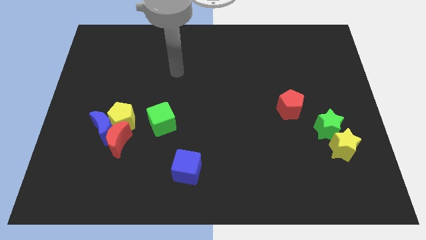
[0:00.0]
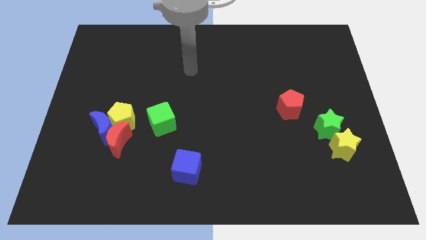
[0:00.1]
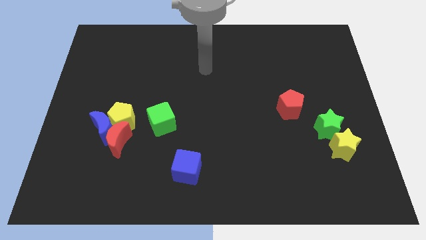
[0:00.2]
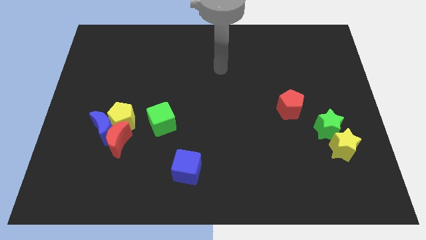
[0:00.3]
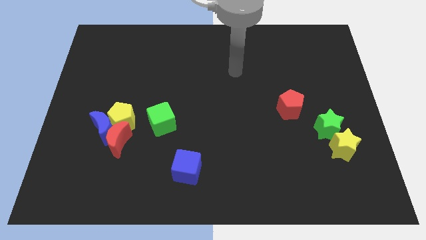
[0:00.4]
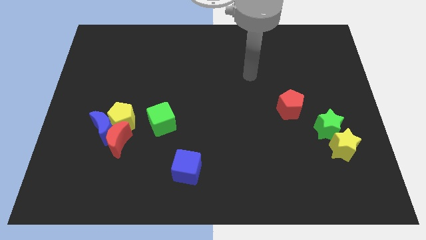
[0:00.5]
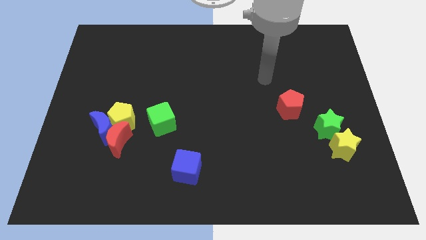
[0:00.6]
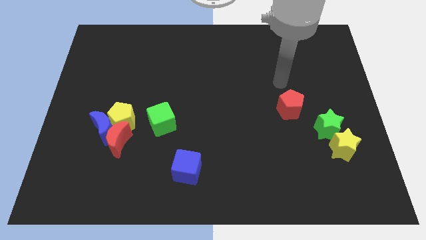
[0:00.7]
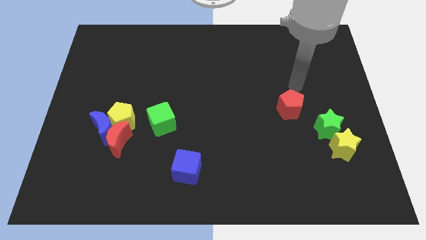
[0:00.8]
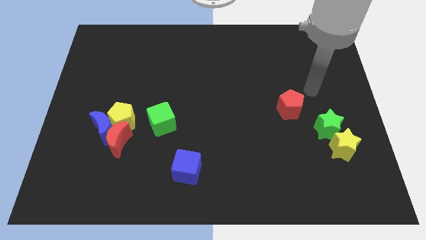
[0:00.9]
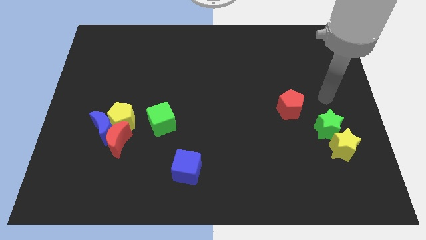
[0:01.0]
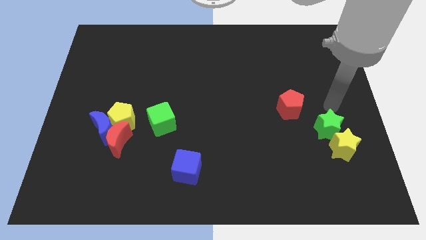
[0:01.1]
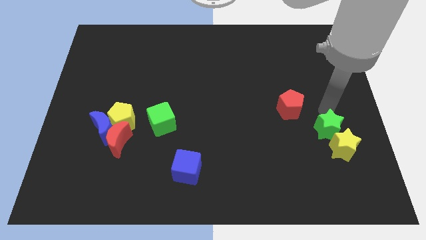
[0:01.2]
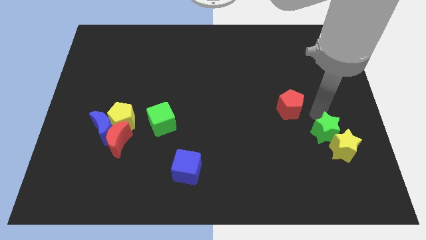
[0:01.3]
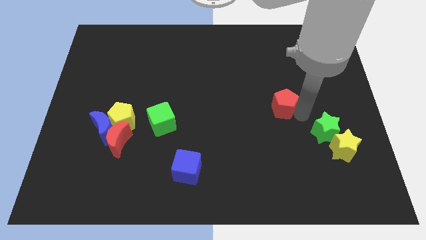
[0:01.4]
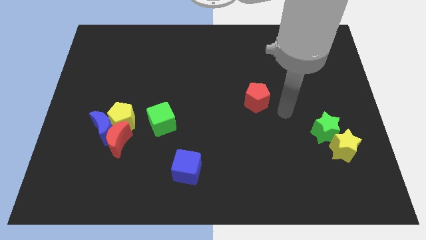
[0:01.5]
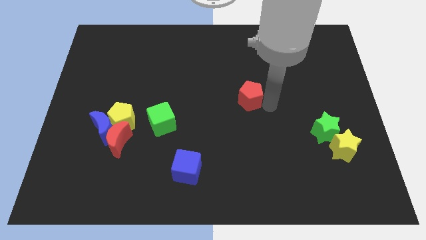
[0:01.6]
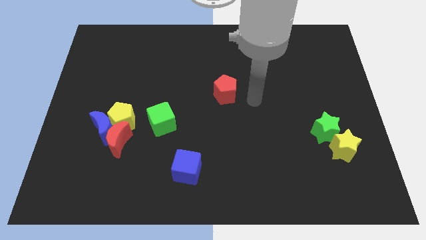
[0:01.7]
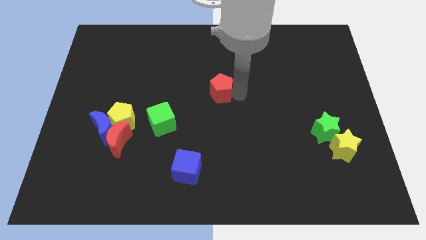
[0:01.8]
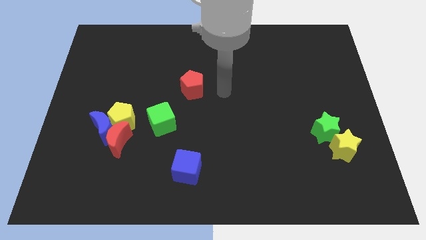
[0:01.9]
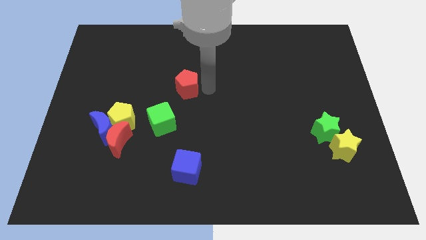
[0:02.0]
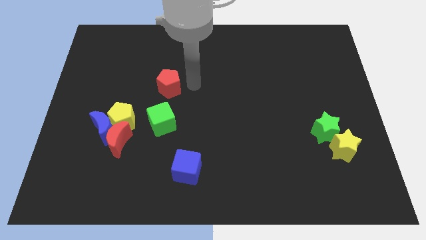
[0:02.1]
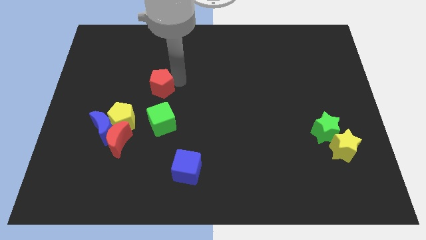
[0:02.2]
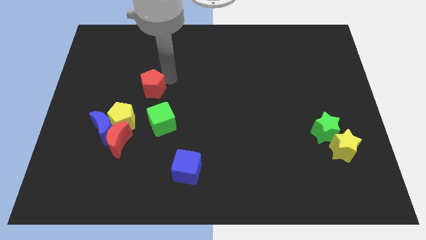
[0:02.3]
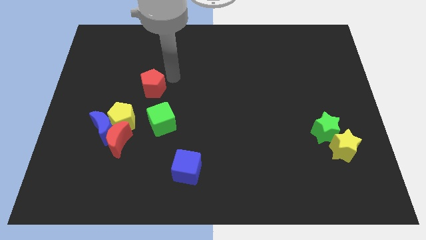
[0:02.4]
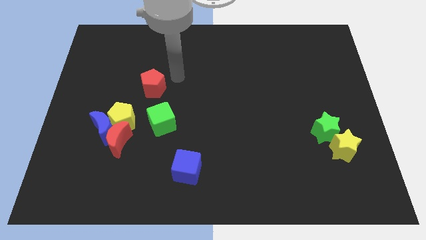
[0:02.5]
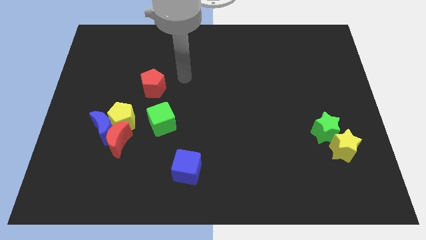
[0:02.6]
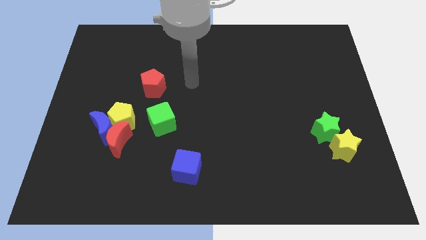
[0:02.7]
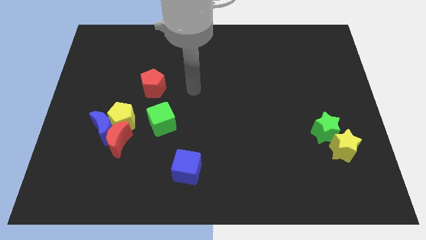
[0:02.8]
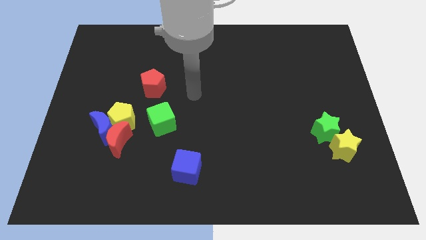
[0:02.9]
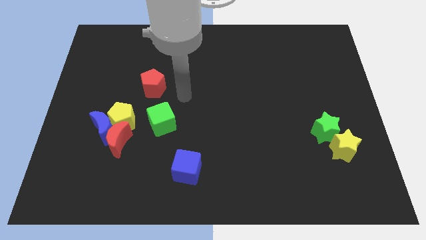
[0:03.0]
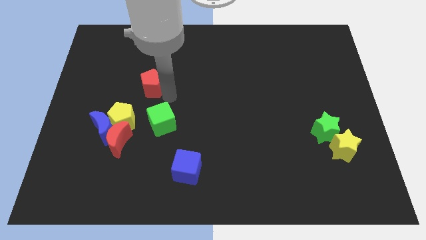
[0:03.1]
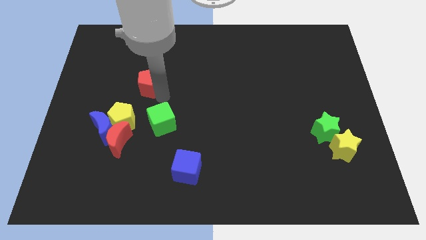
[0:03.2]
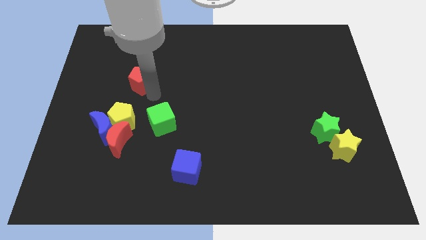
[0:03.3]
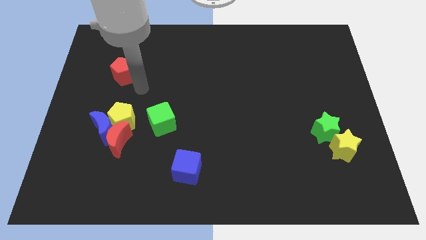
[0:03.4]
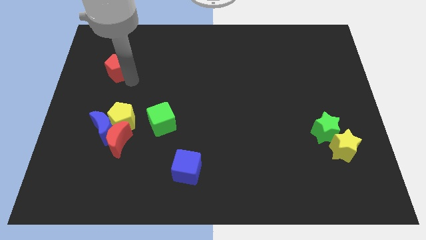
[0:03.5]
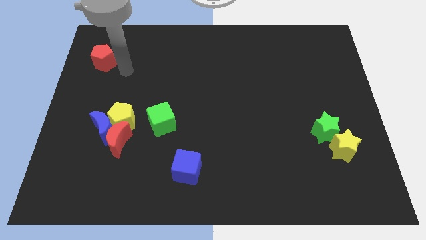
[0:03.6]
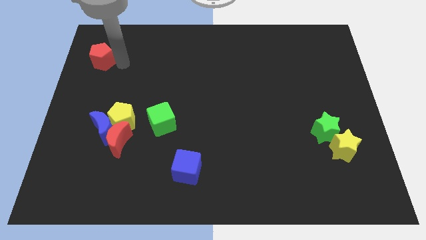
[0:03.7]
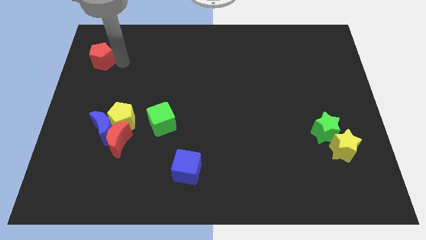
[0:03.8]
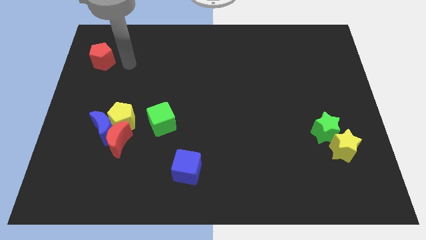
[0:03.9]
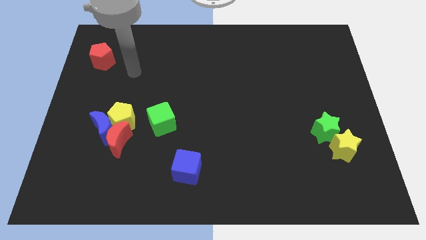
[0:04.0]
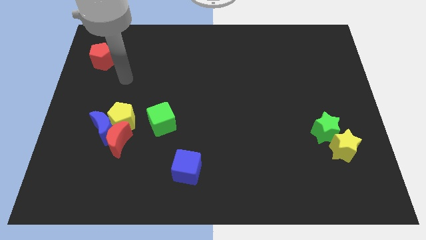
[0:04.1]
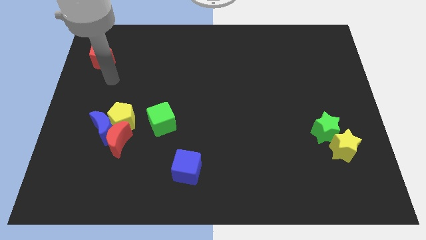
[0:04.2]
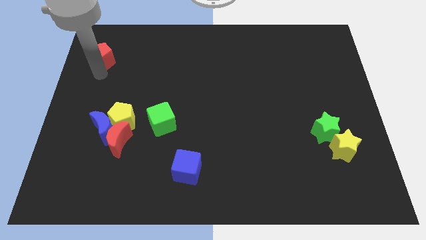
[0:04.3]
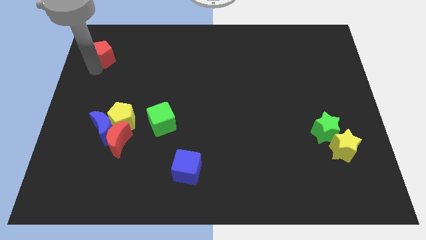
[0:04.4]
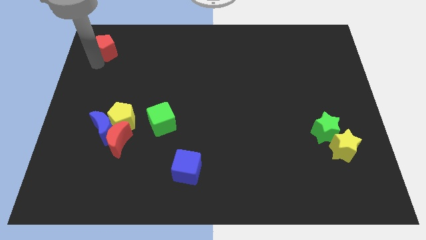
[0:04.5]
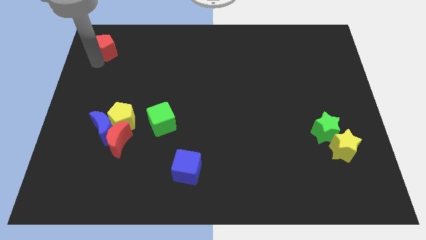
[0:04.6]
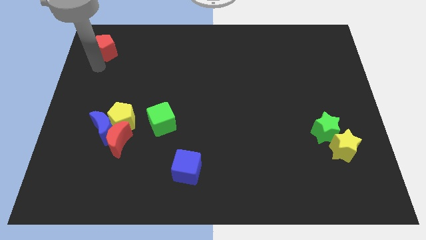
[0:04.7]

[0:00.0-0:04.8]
drag the red pentagon to the left

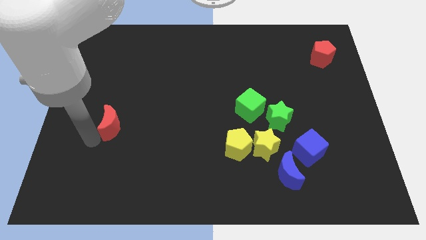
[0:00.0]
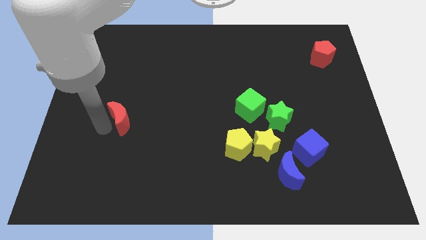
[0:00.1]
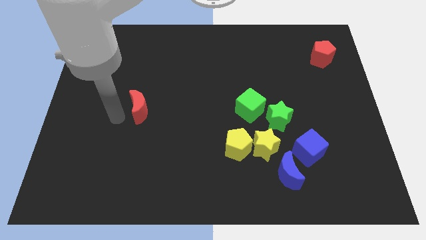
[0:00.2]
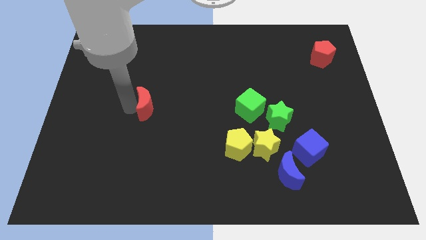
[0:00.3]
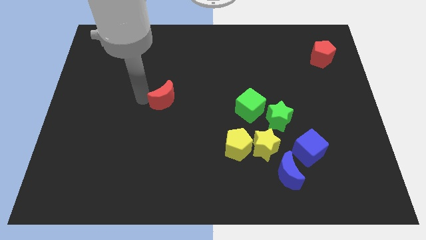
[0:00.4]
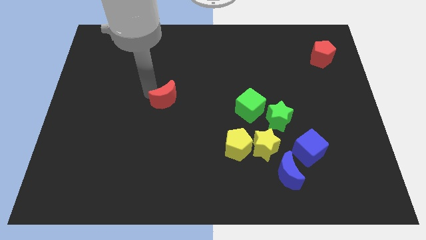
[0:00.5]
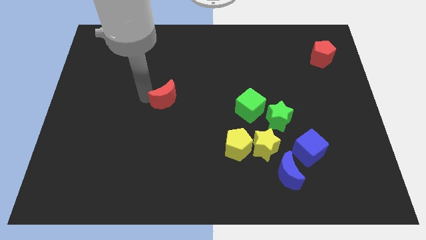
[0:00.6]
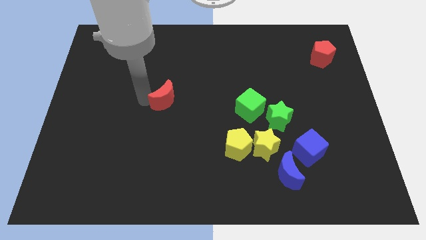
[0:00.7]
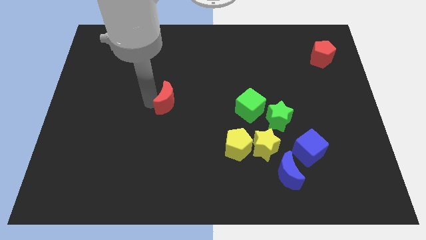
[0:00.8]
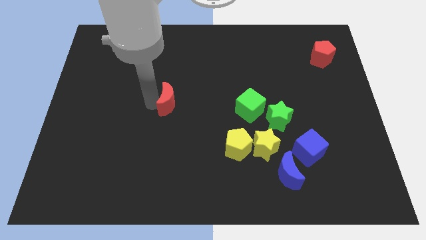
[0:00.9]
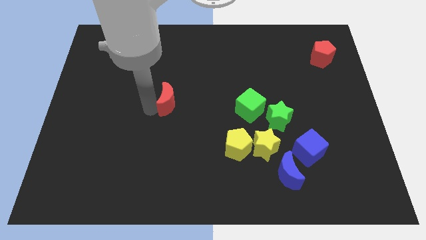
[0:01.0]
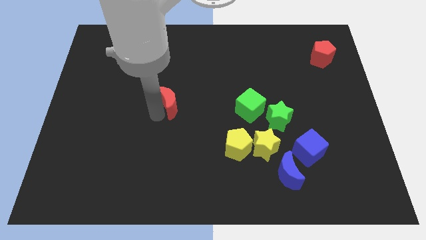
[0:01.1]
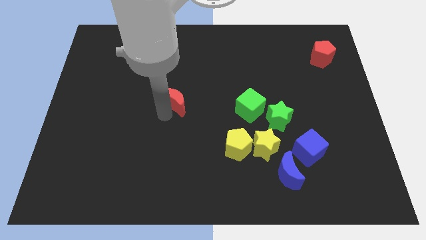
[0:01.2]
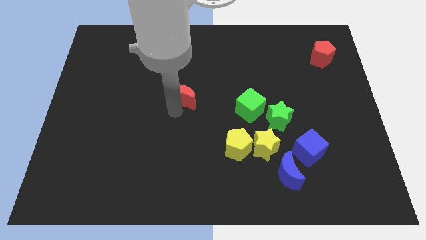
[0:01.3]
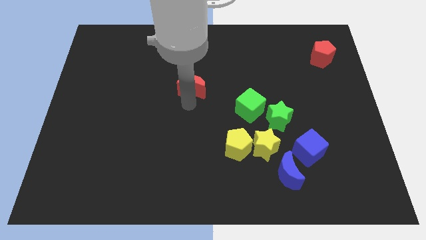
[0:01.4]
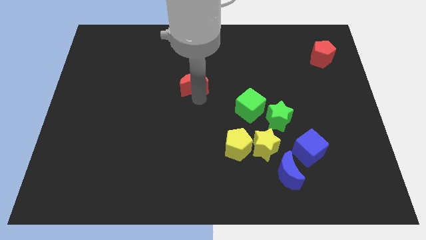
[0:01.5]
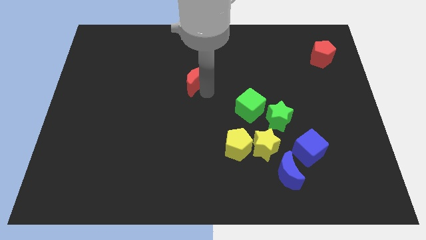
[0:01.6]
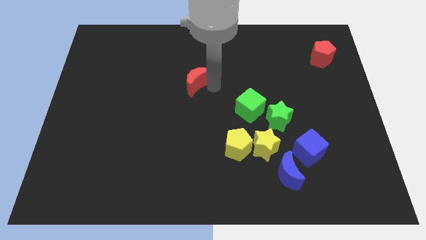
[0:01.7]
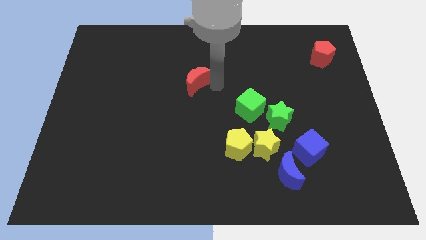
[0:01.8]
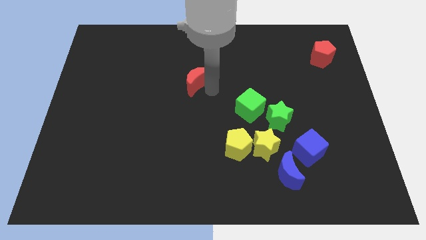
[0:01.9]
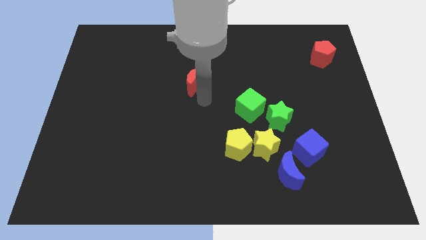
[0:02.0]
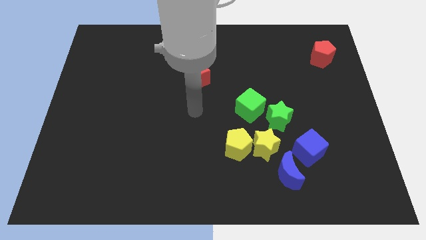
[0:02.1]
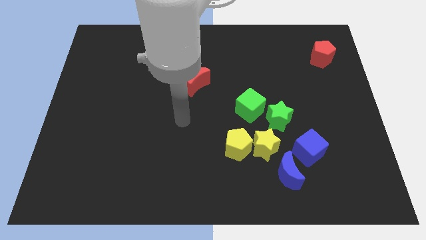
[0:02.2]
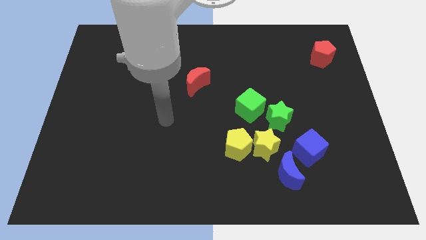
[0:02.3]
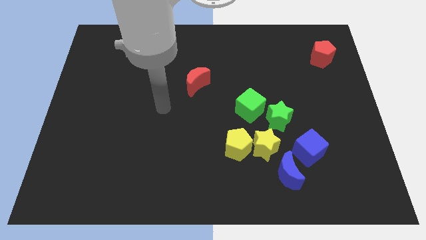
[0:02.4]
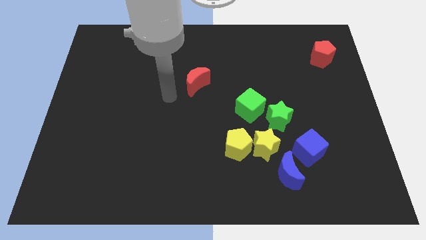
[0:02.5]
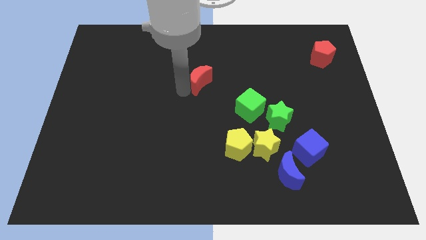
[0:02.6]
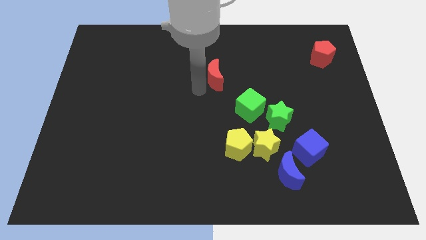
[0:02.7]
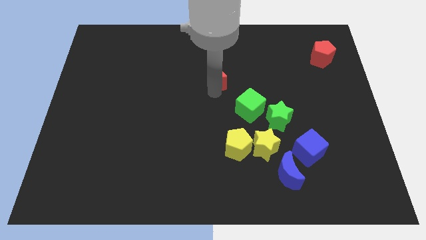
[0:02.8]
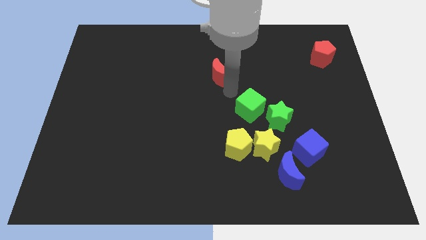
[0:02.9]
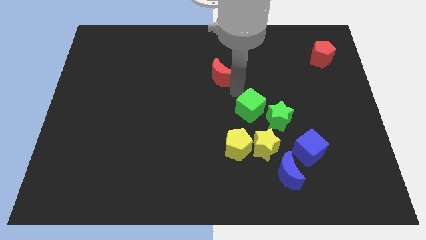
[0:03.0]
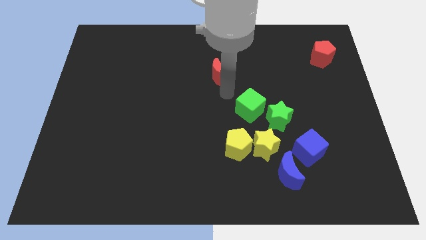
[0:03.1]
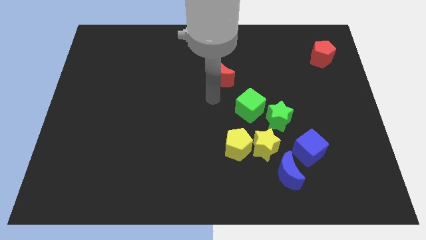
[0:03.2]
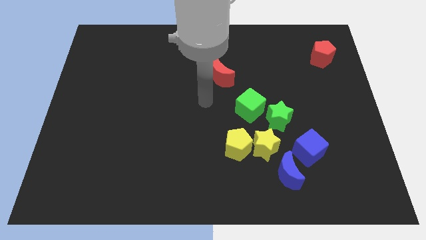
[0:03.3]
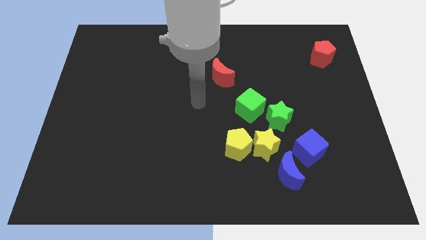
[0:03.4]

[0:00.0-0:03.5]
place the red moon diagonally to the top left side of the green cube

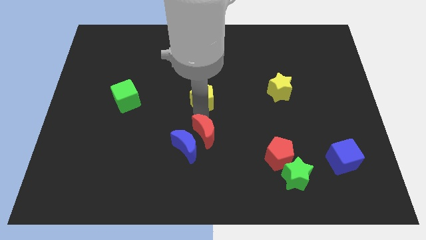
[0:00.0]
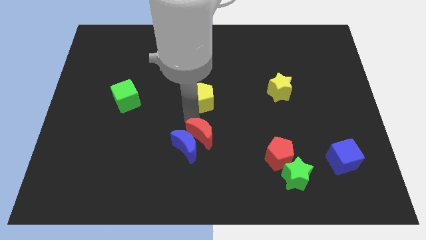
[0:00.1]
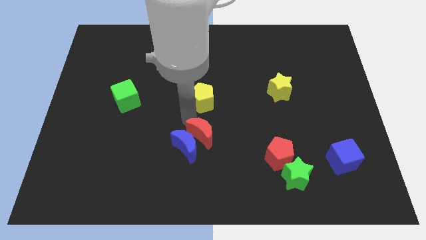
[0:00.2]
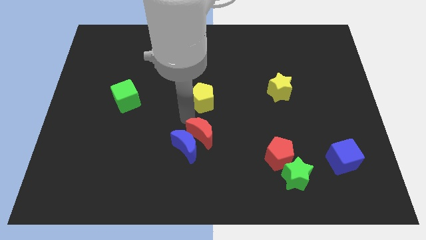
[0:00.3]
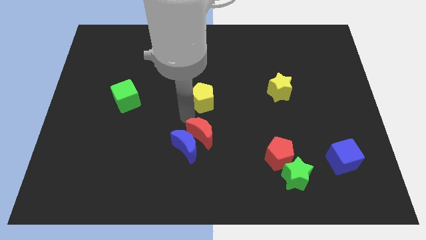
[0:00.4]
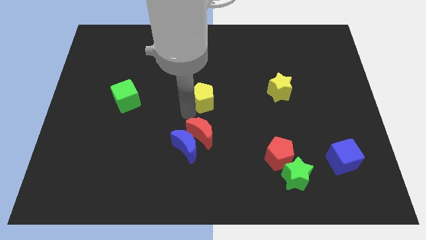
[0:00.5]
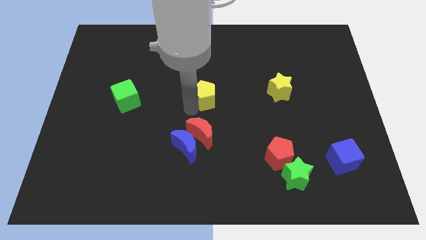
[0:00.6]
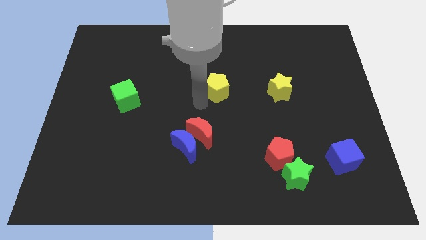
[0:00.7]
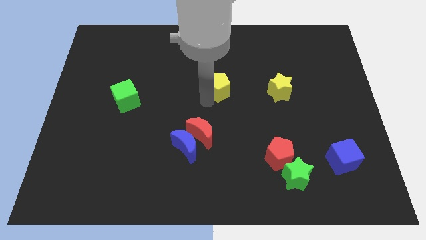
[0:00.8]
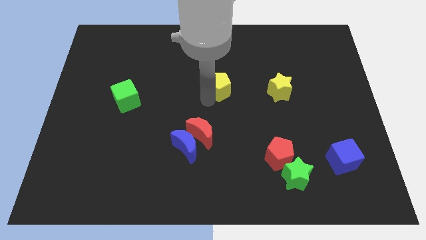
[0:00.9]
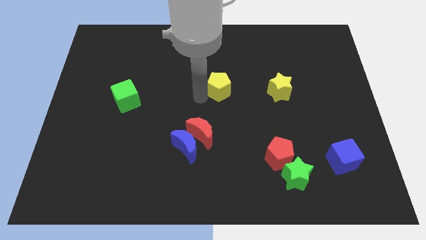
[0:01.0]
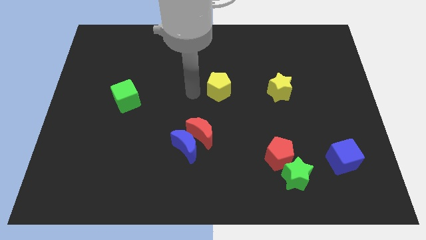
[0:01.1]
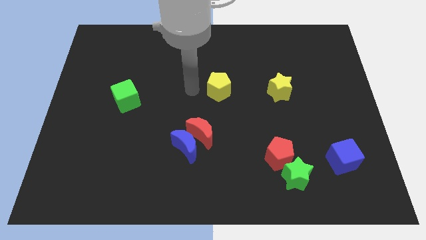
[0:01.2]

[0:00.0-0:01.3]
place the yellow pentagon to the horizontal left of yellow star
